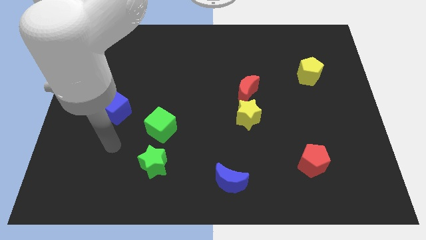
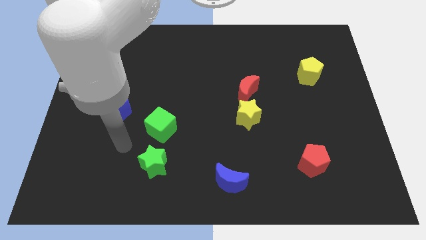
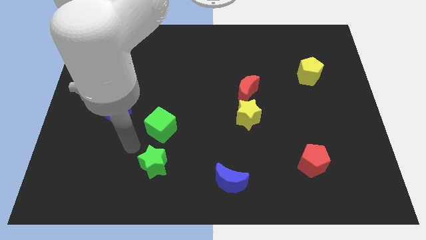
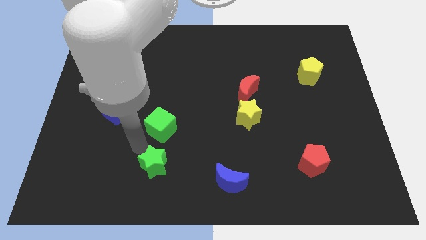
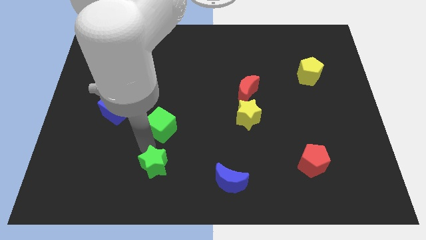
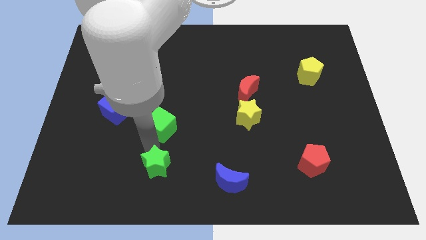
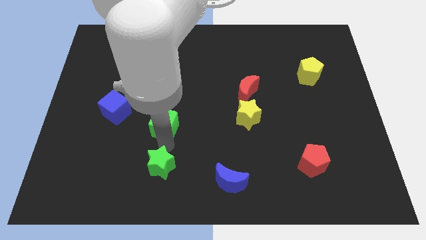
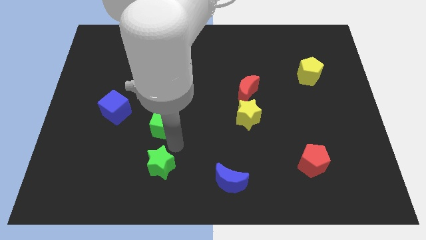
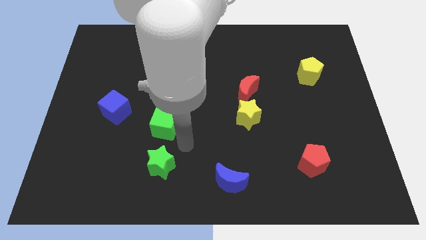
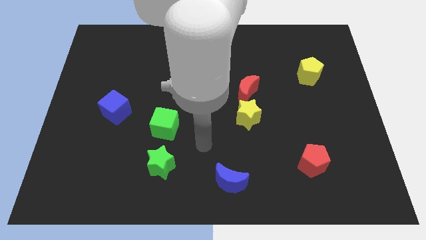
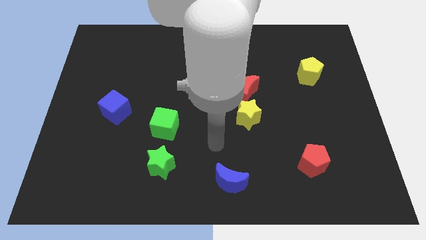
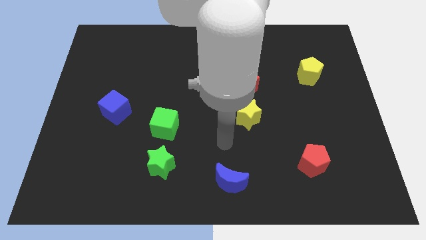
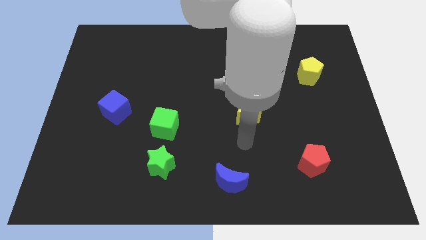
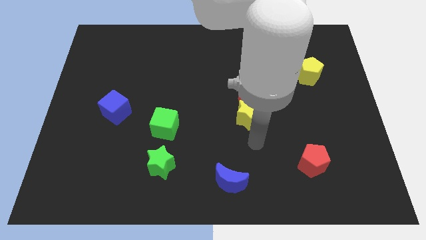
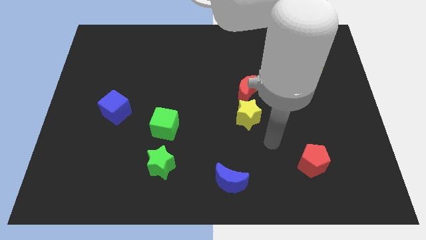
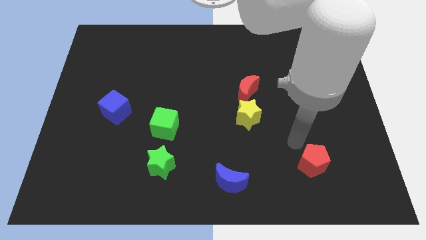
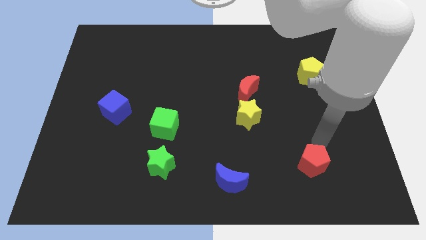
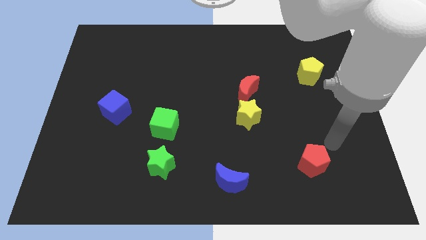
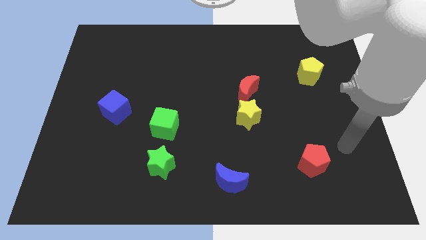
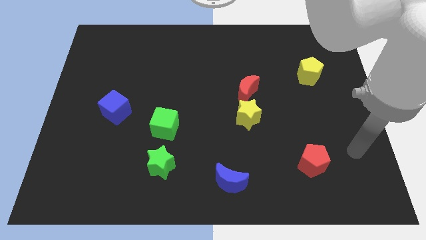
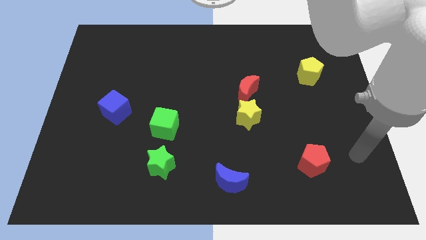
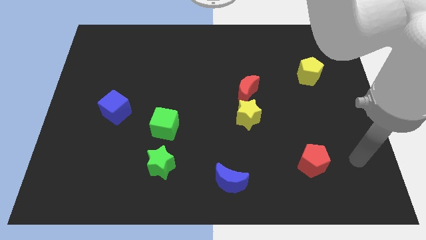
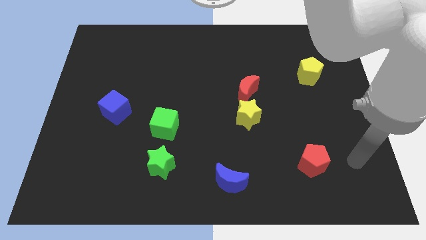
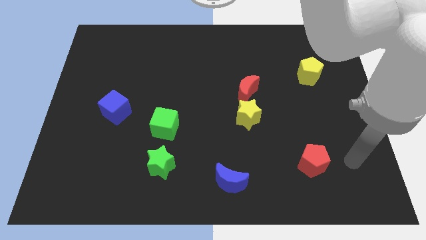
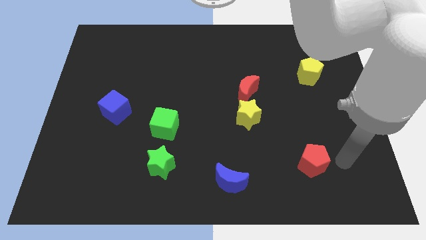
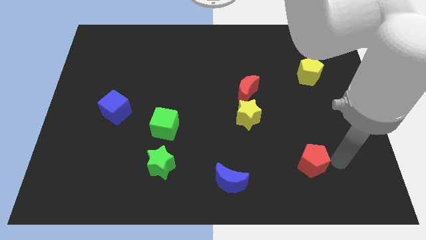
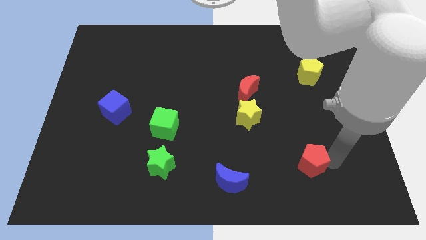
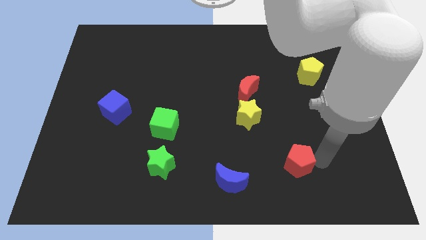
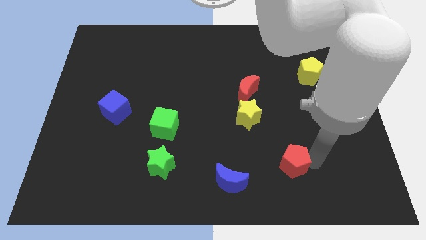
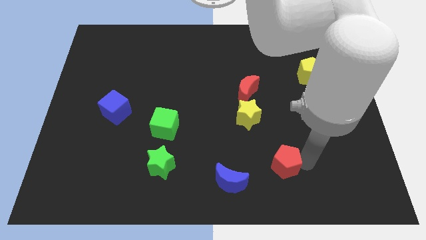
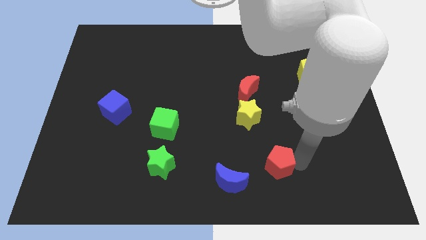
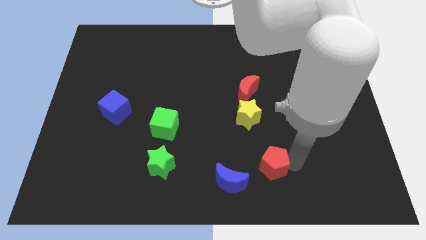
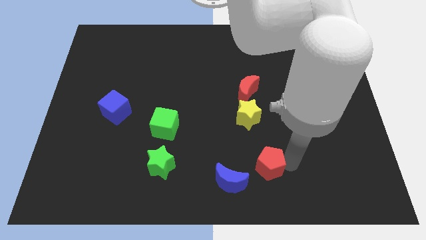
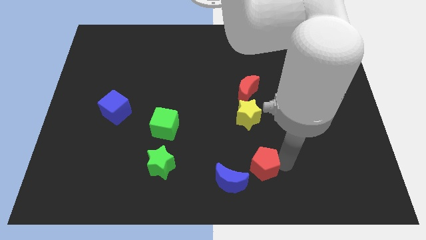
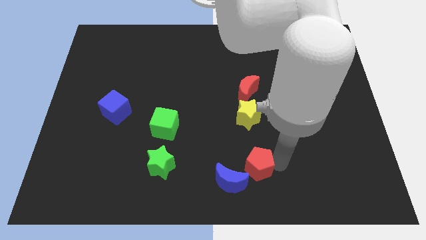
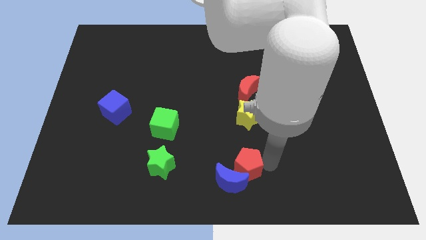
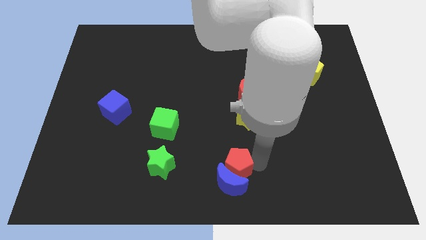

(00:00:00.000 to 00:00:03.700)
push the red pentagon towards the blue moon

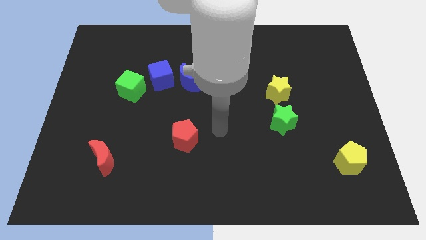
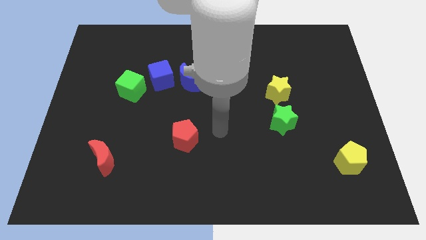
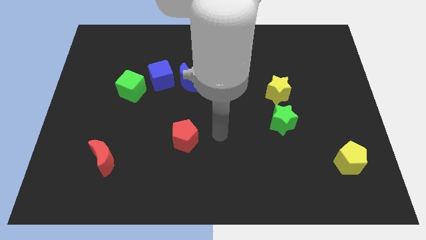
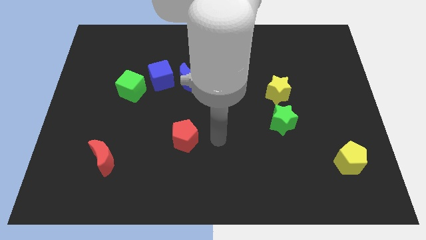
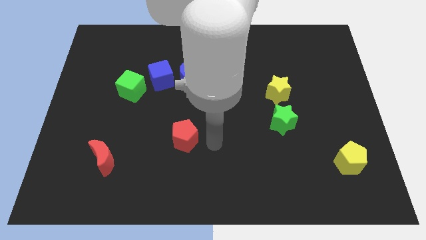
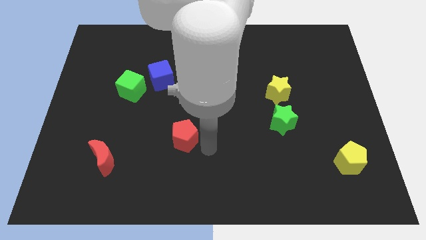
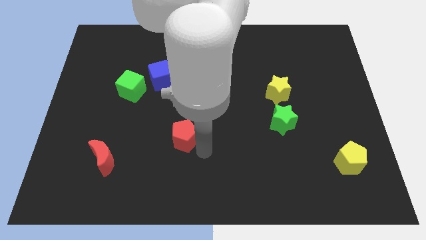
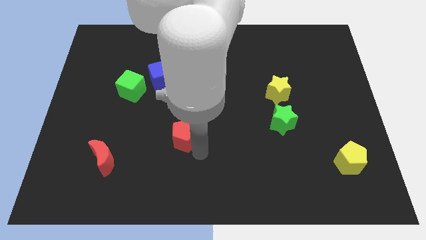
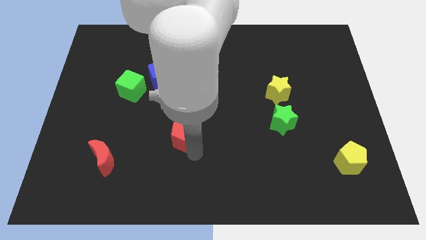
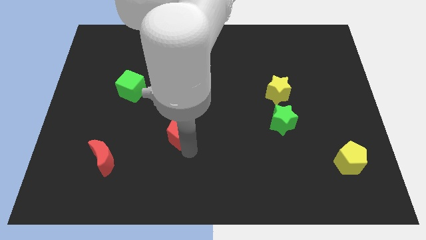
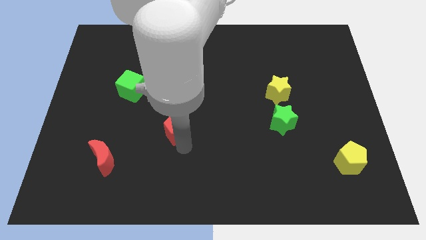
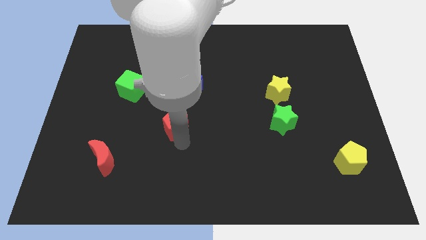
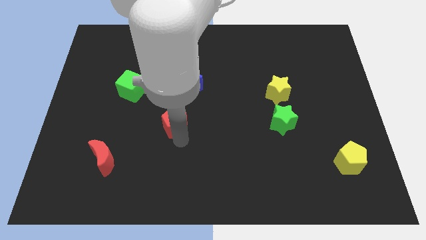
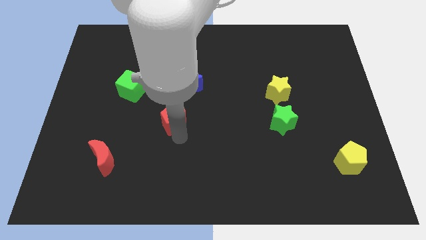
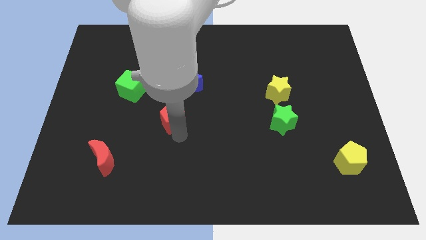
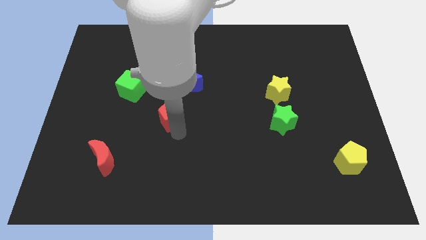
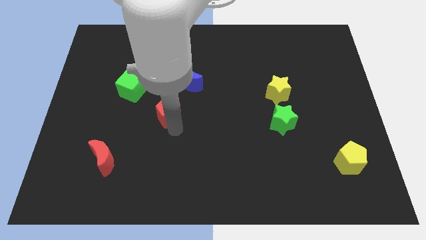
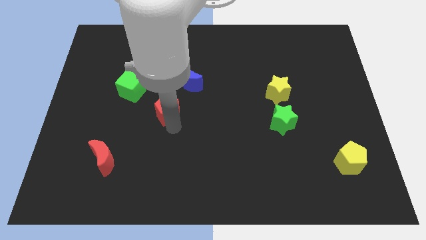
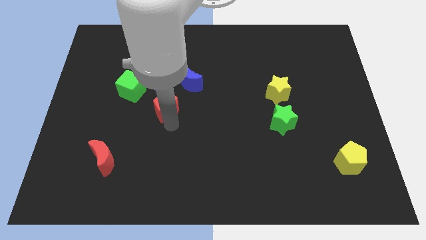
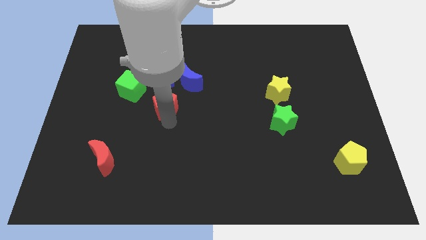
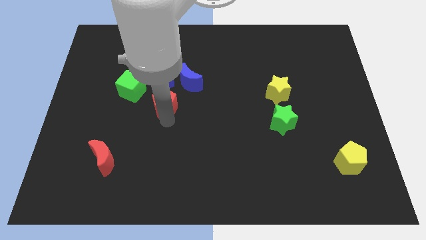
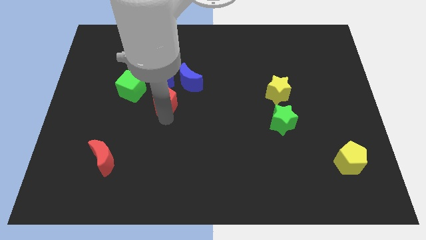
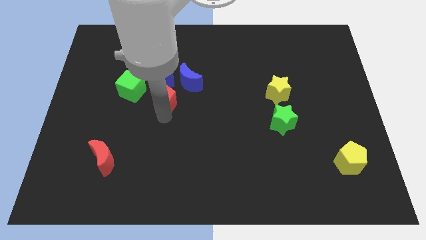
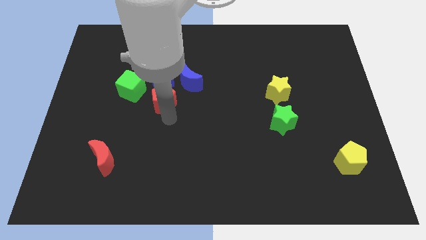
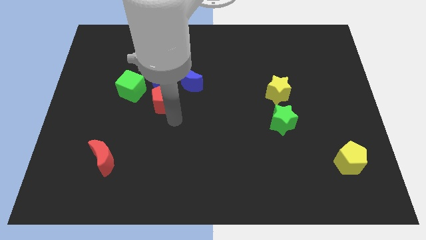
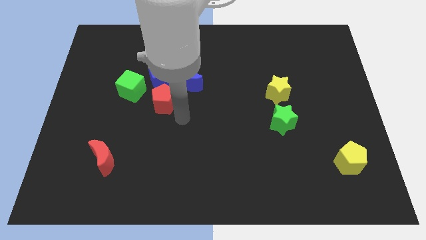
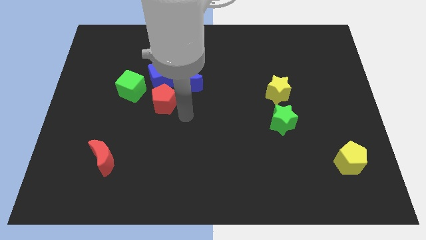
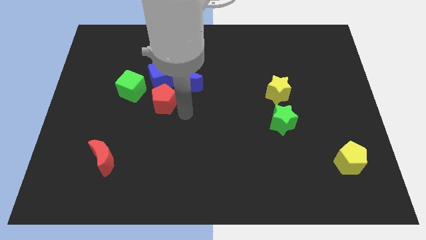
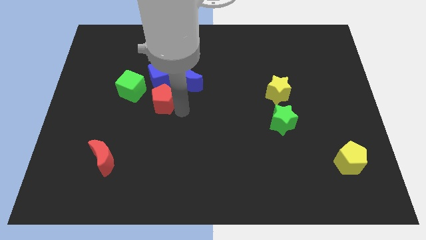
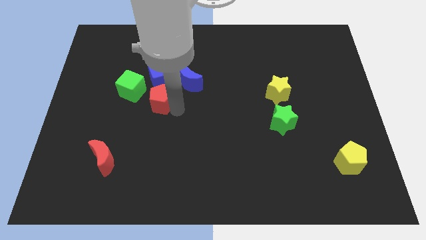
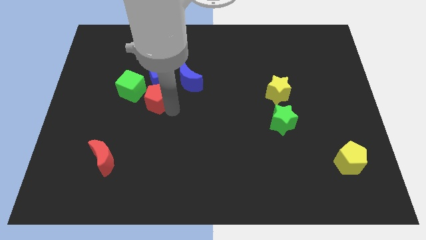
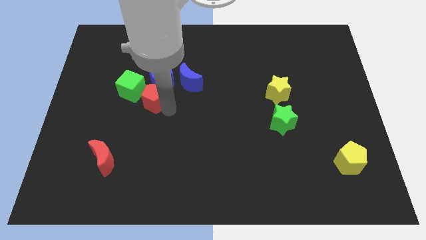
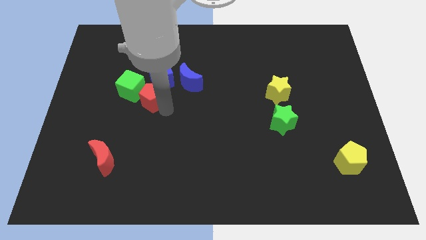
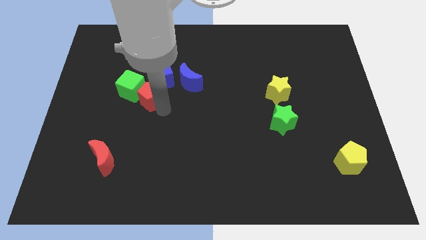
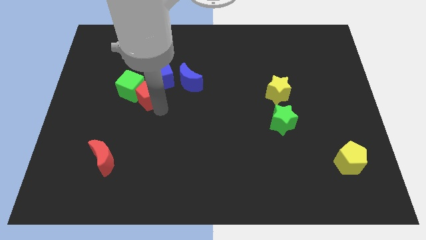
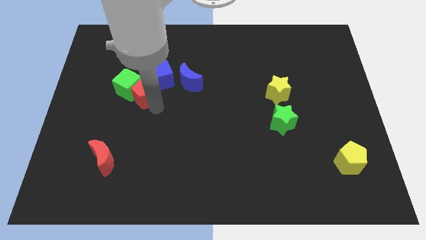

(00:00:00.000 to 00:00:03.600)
push the red pentagon to the green cube

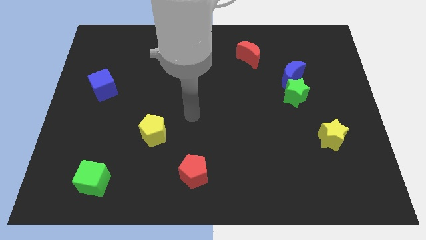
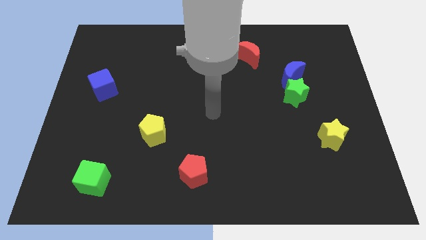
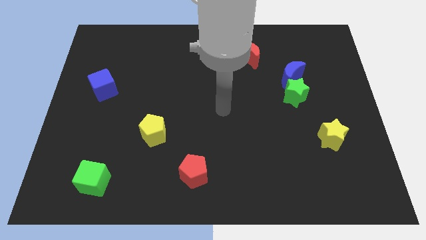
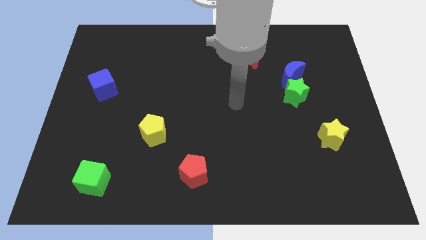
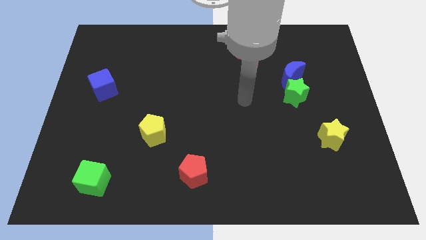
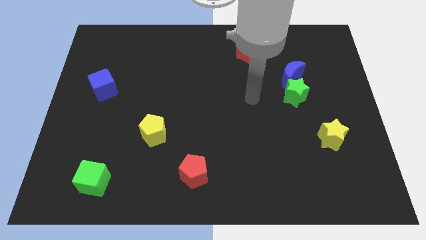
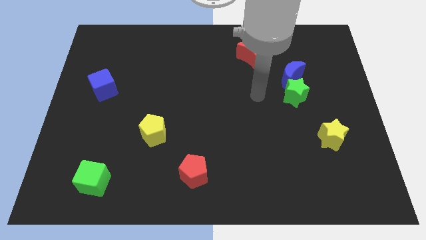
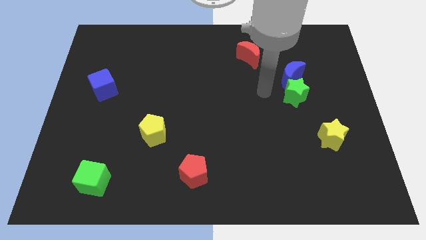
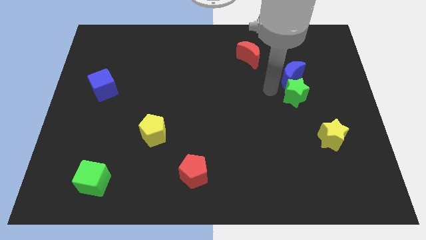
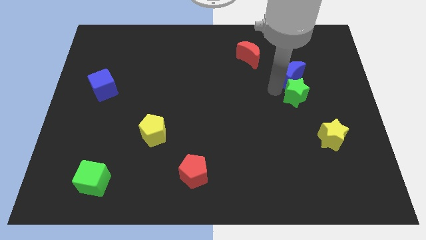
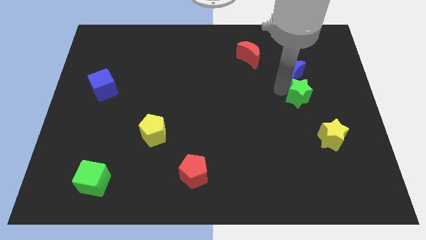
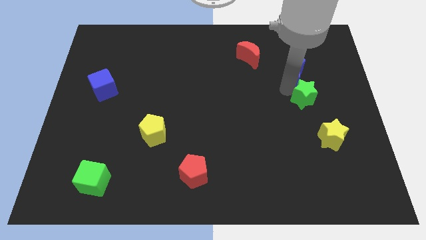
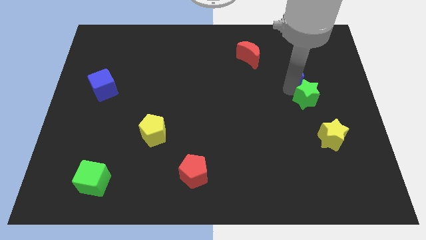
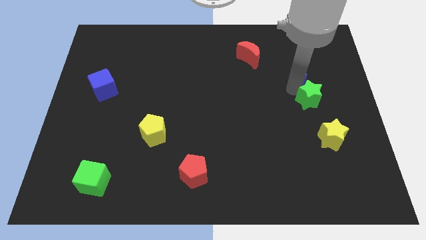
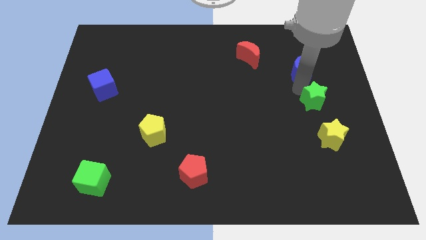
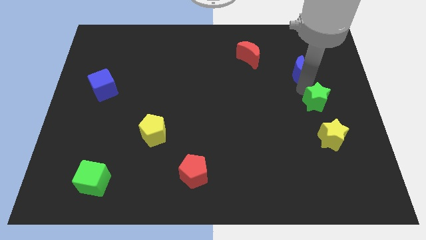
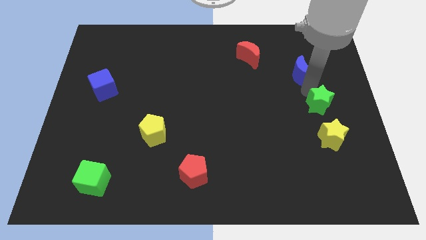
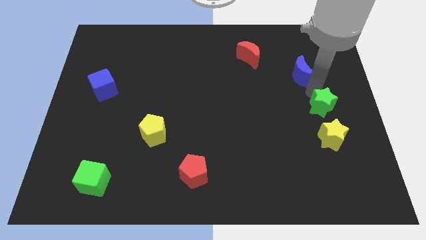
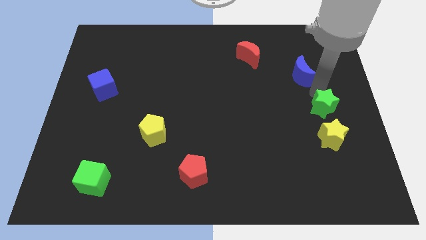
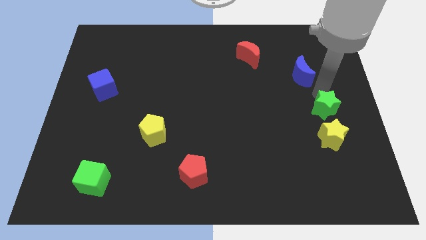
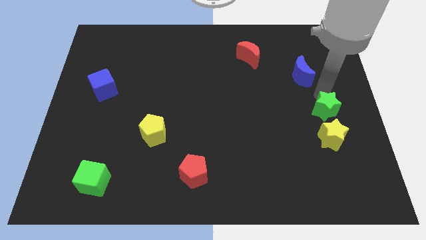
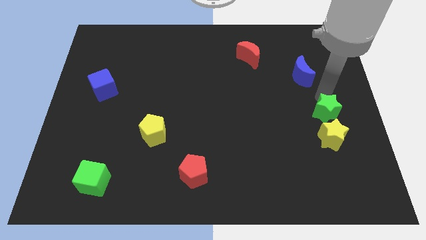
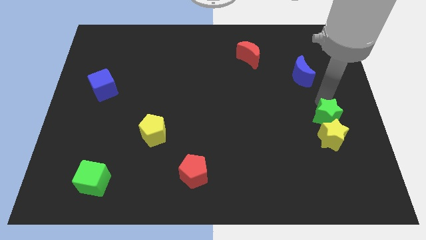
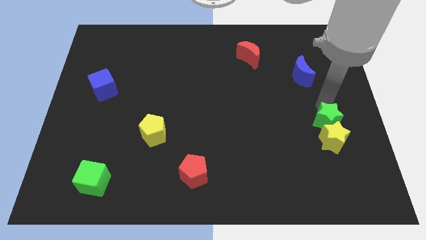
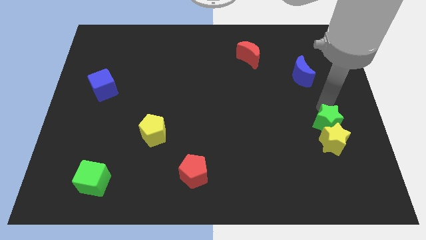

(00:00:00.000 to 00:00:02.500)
slide the green star close to the yellow star
